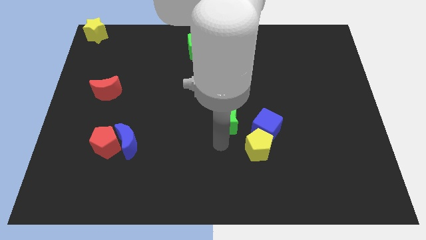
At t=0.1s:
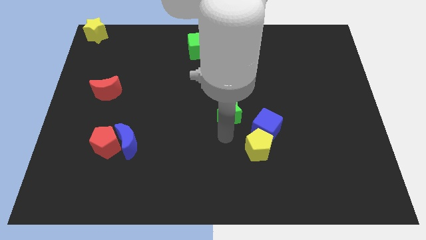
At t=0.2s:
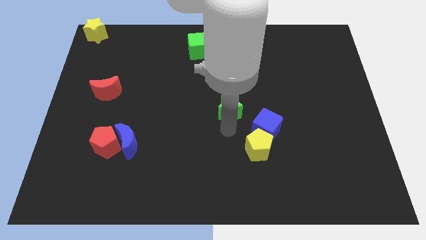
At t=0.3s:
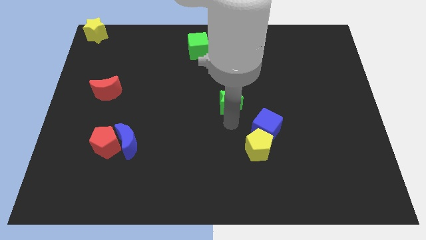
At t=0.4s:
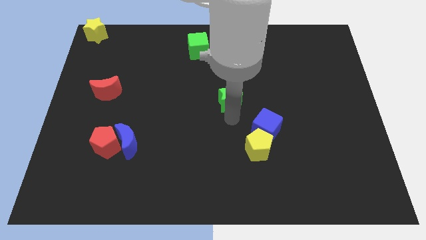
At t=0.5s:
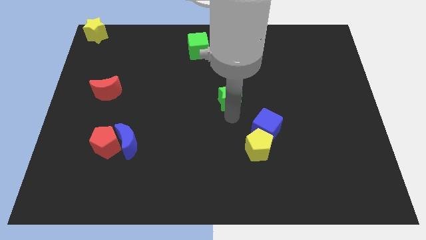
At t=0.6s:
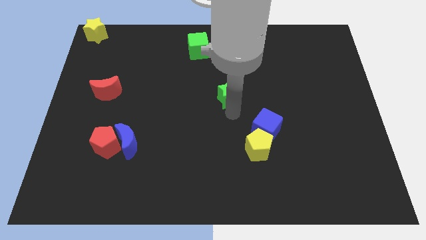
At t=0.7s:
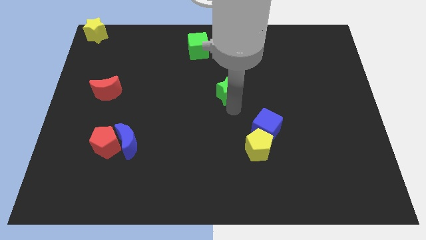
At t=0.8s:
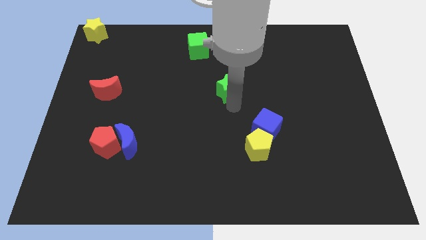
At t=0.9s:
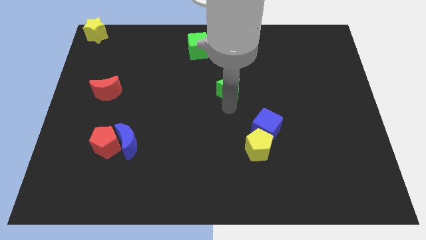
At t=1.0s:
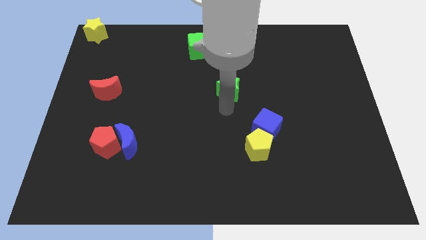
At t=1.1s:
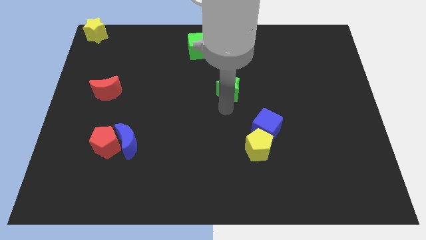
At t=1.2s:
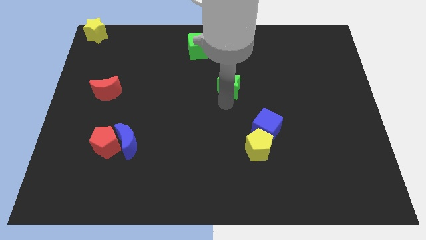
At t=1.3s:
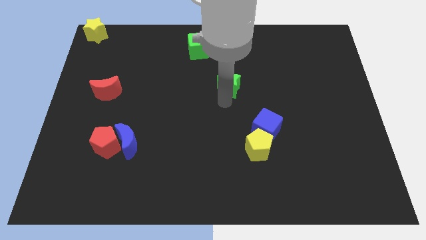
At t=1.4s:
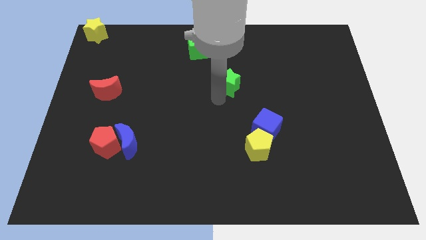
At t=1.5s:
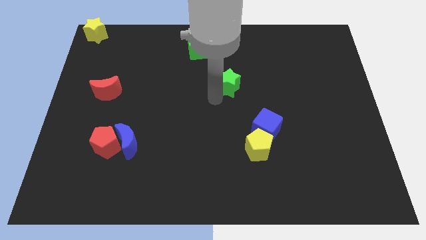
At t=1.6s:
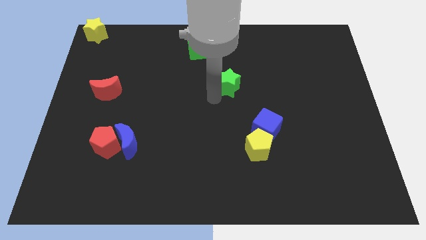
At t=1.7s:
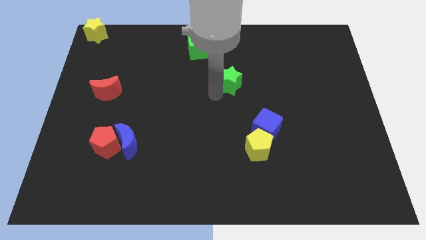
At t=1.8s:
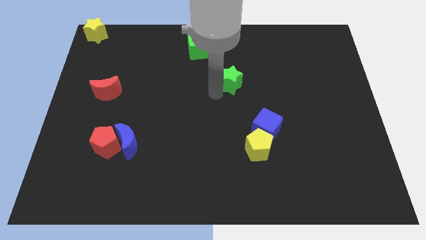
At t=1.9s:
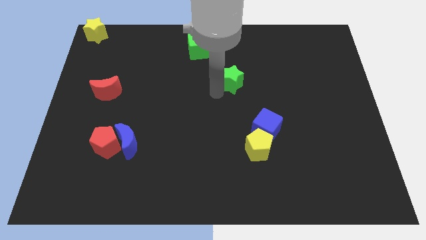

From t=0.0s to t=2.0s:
move the green star to the top of the board

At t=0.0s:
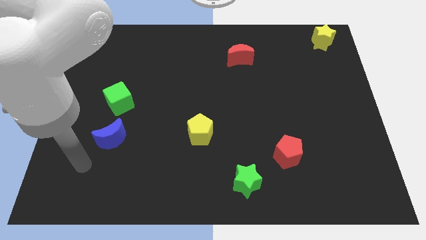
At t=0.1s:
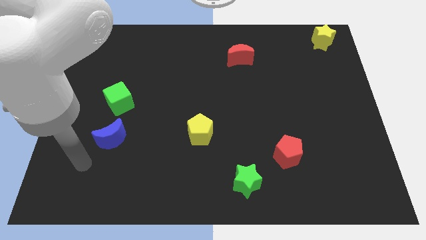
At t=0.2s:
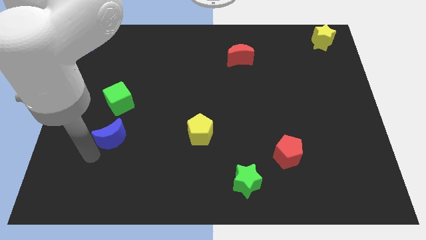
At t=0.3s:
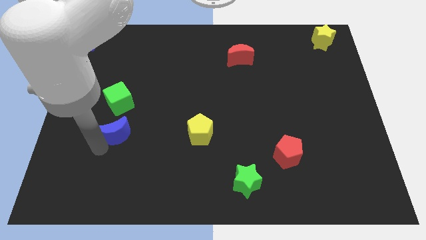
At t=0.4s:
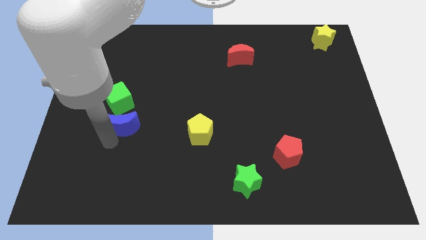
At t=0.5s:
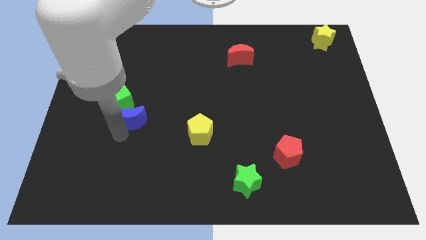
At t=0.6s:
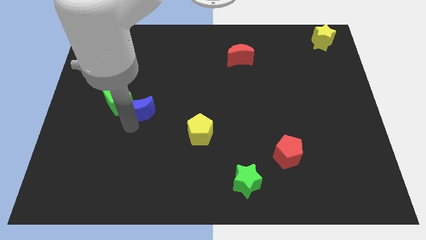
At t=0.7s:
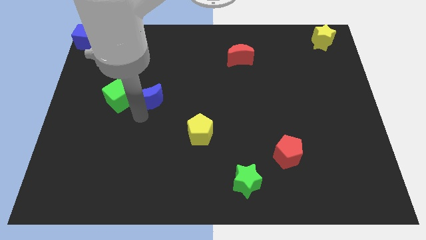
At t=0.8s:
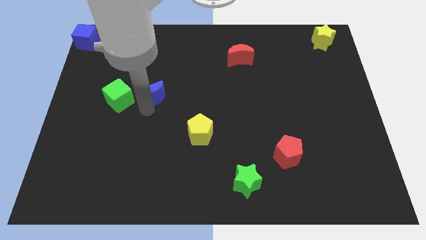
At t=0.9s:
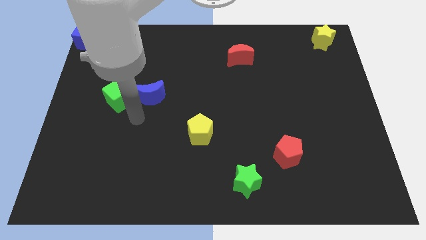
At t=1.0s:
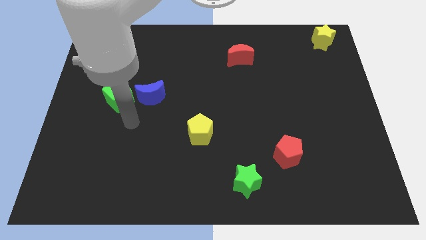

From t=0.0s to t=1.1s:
place the blue moon to the right of the green cube

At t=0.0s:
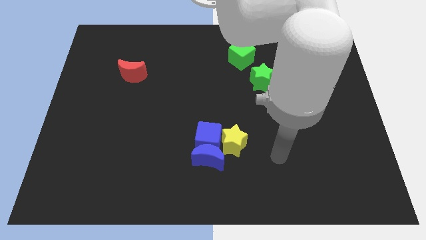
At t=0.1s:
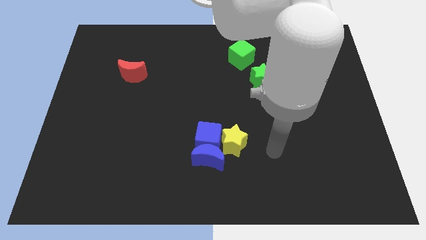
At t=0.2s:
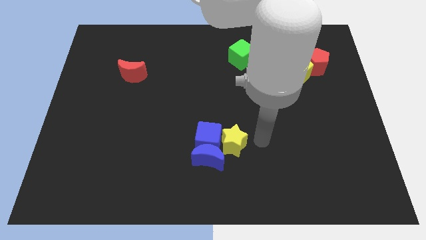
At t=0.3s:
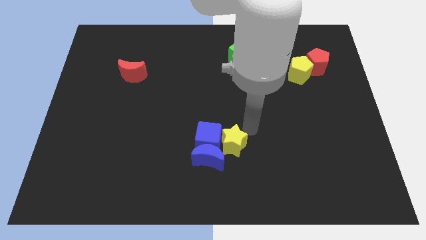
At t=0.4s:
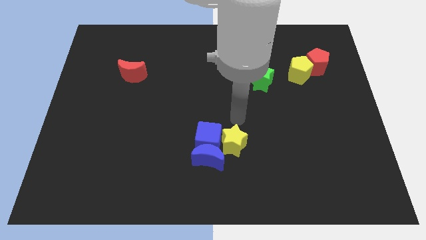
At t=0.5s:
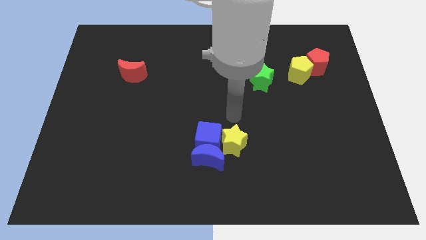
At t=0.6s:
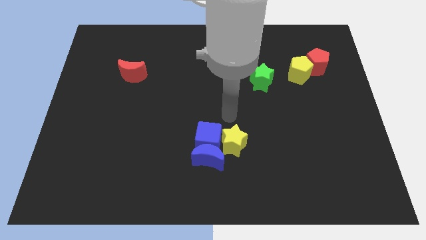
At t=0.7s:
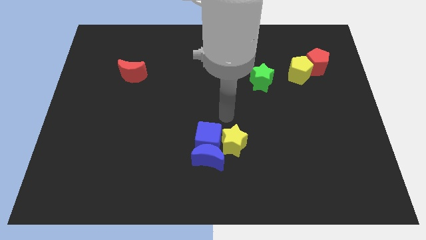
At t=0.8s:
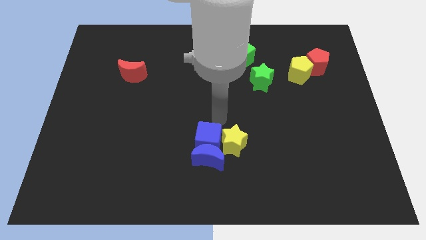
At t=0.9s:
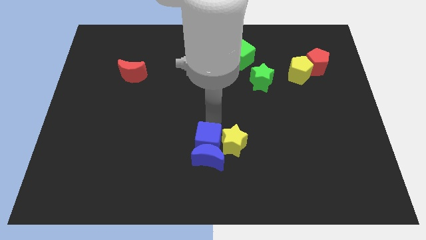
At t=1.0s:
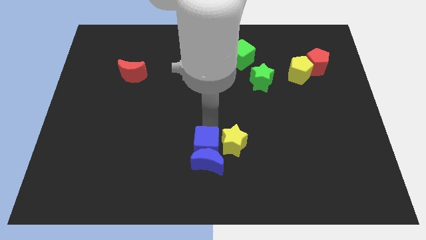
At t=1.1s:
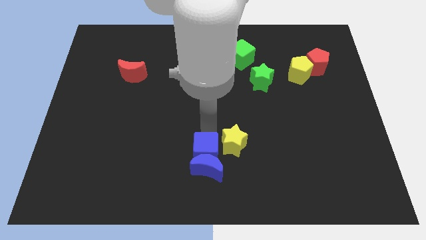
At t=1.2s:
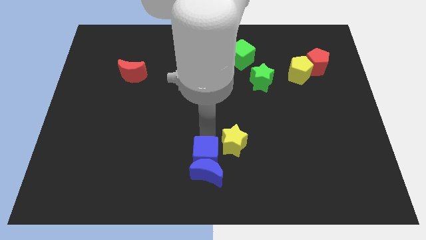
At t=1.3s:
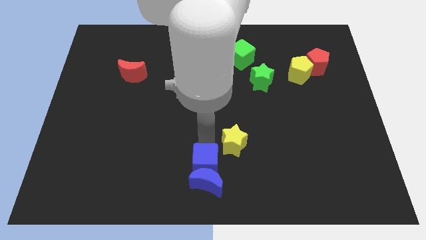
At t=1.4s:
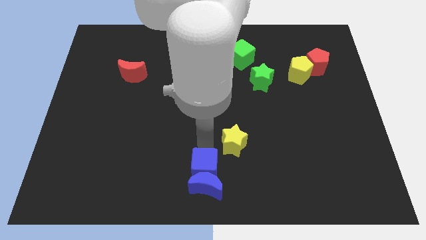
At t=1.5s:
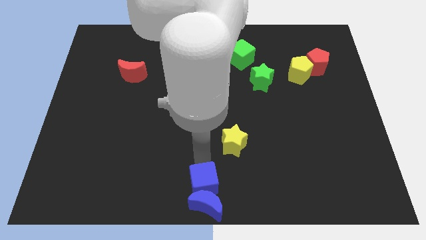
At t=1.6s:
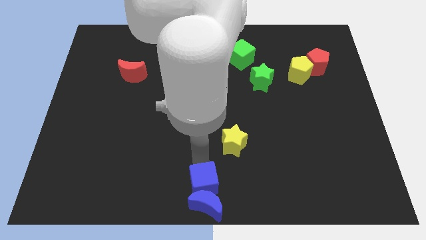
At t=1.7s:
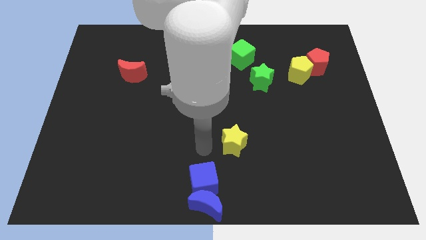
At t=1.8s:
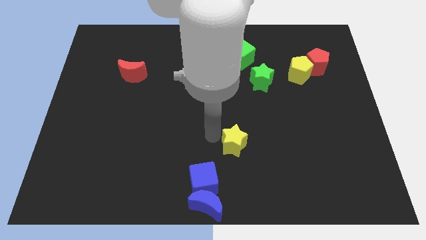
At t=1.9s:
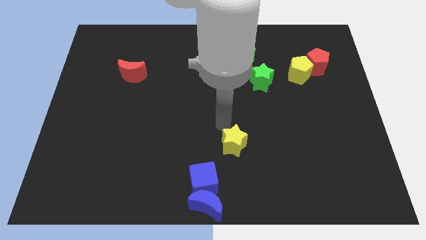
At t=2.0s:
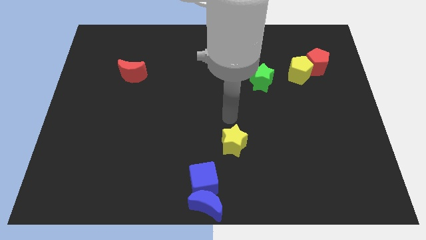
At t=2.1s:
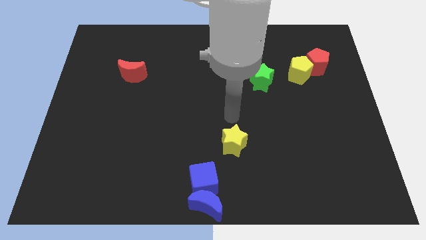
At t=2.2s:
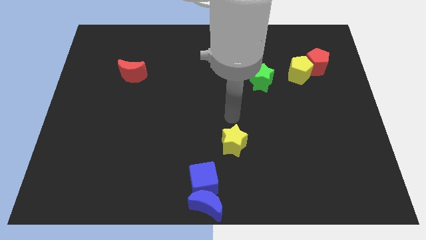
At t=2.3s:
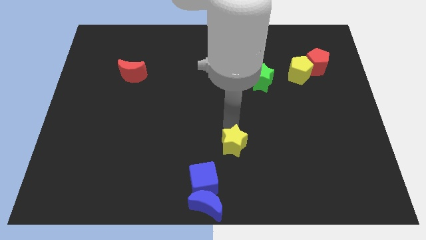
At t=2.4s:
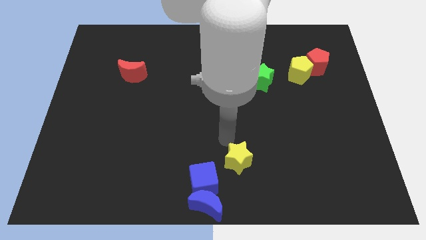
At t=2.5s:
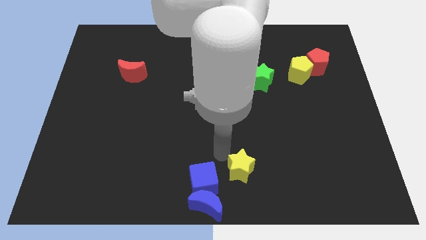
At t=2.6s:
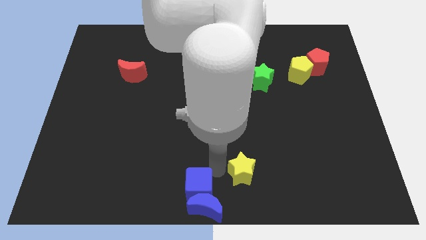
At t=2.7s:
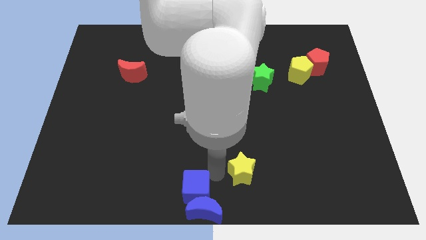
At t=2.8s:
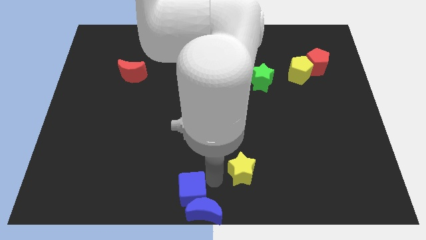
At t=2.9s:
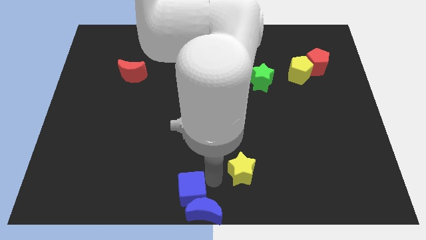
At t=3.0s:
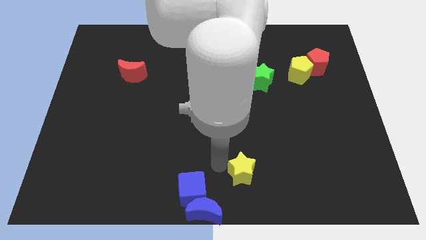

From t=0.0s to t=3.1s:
push the group of blue blocks to the bottom center of the board

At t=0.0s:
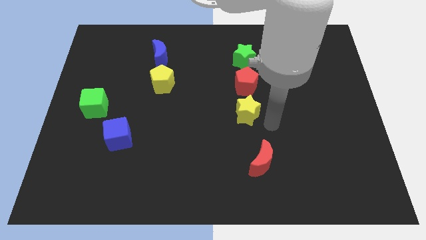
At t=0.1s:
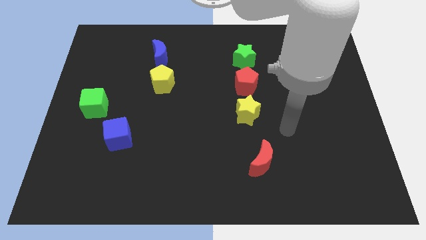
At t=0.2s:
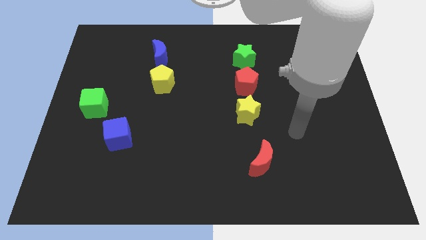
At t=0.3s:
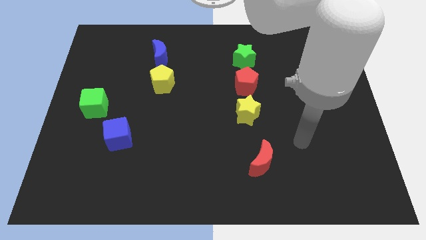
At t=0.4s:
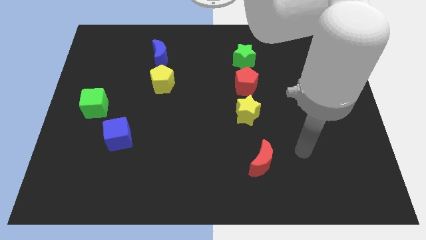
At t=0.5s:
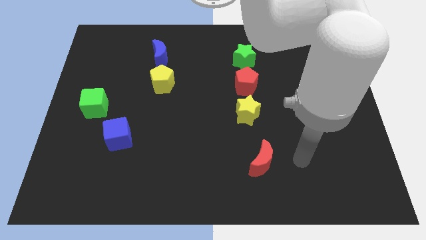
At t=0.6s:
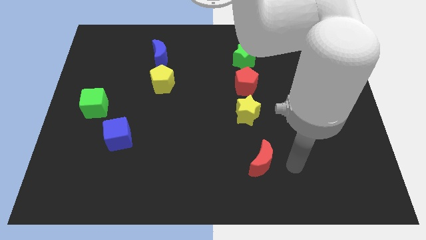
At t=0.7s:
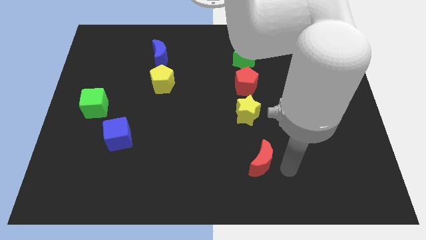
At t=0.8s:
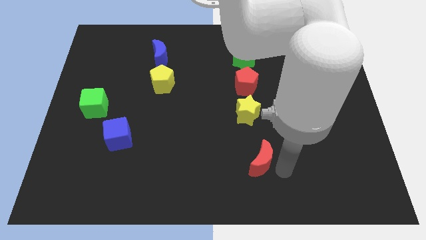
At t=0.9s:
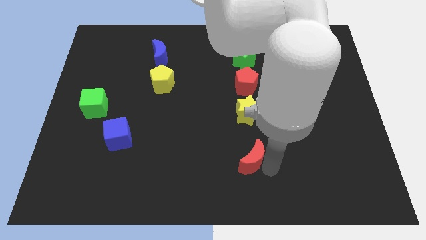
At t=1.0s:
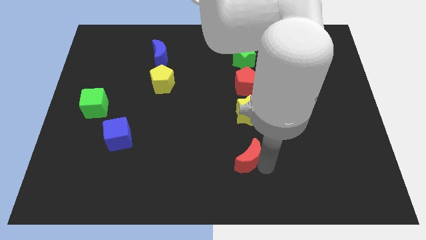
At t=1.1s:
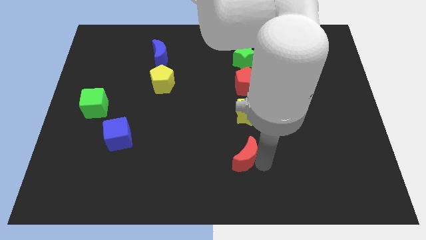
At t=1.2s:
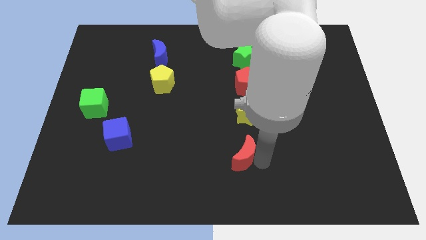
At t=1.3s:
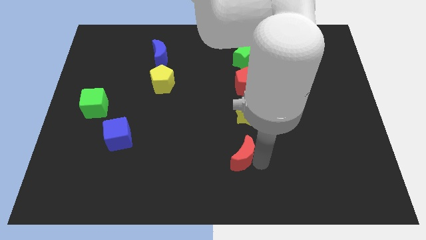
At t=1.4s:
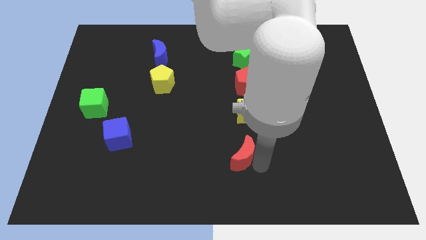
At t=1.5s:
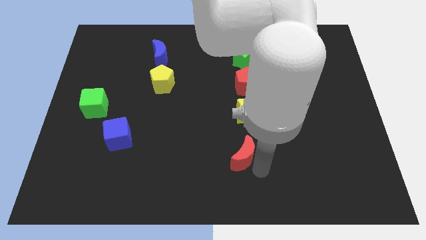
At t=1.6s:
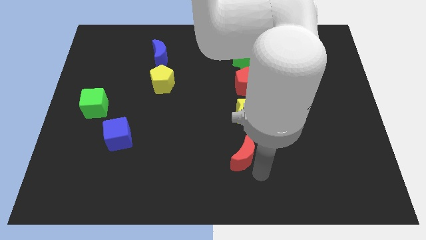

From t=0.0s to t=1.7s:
push red moon to the bottom of the yellow star

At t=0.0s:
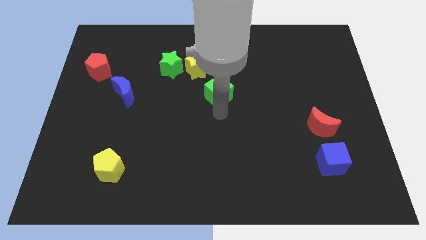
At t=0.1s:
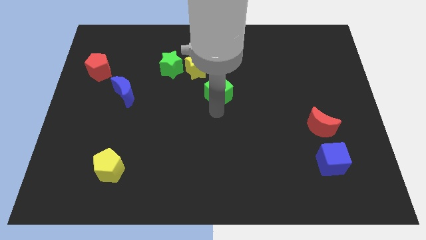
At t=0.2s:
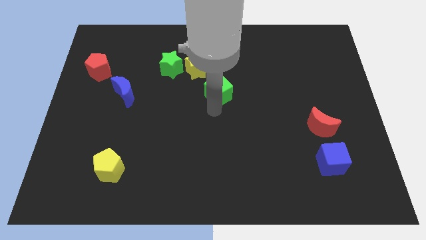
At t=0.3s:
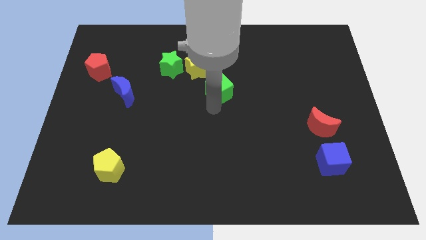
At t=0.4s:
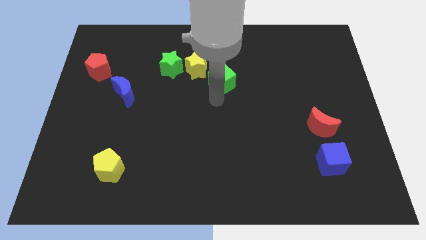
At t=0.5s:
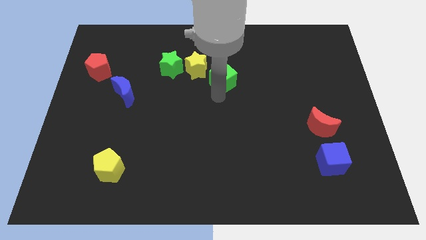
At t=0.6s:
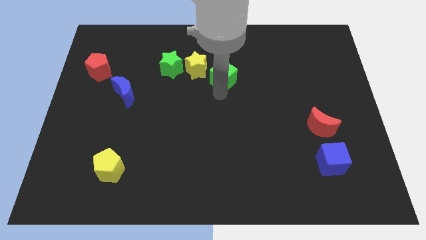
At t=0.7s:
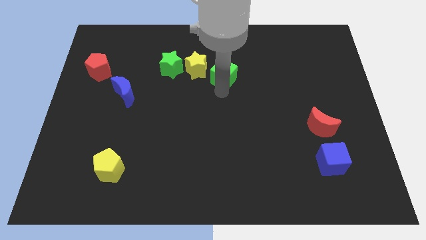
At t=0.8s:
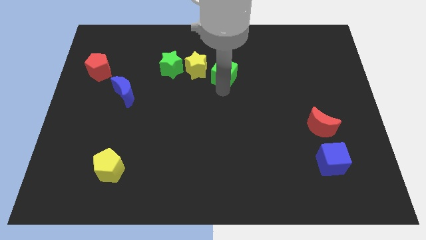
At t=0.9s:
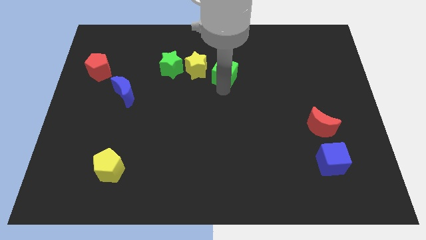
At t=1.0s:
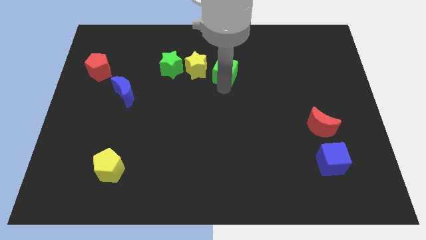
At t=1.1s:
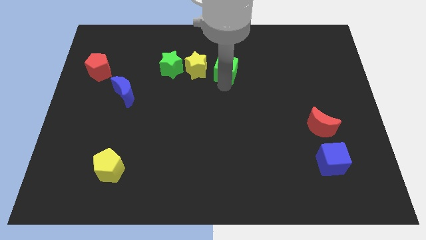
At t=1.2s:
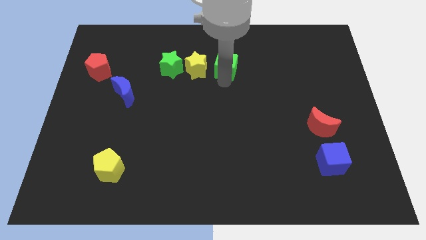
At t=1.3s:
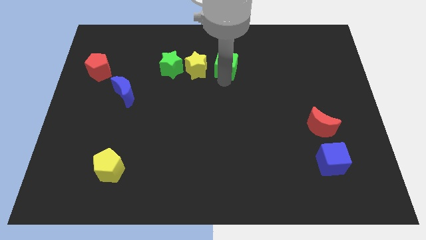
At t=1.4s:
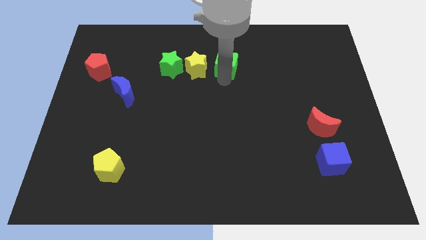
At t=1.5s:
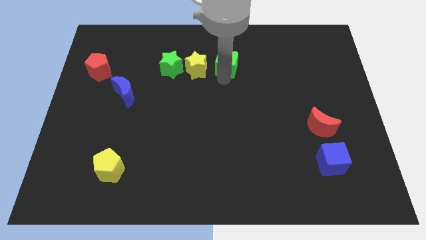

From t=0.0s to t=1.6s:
place the green cube to the right of the yellow star
